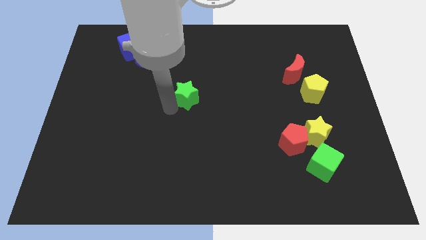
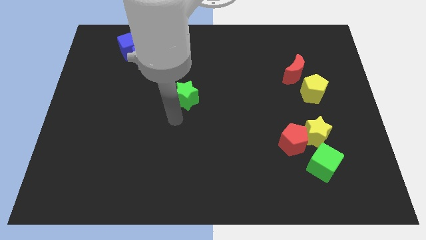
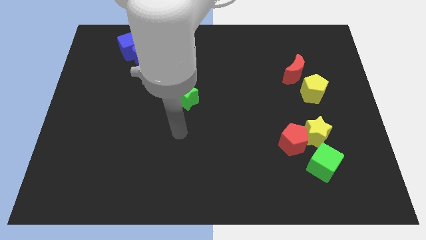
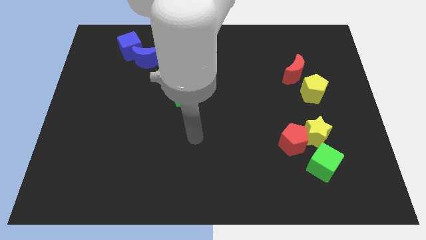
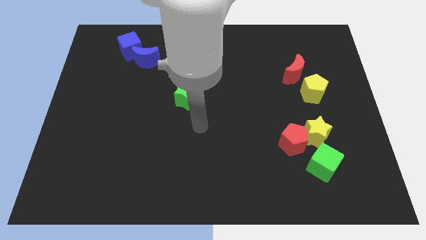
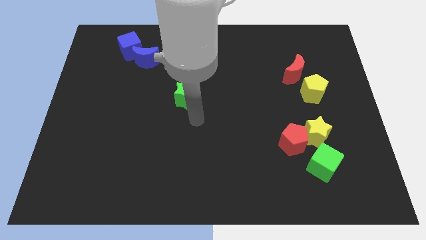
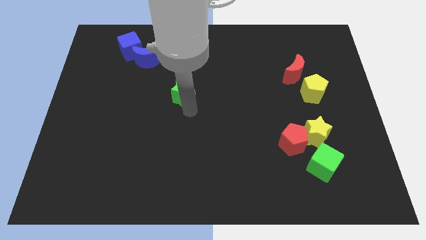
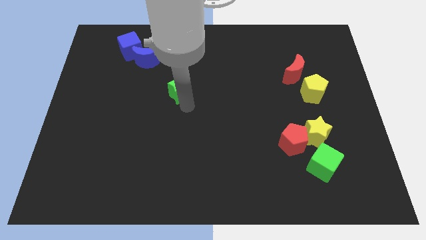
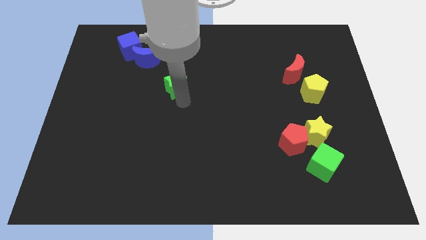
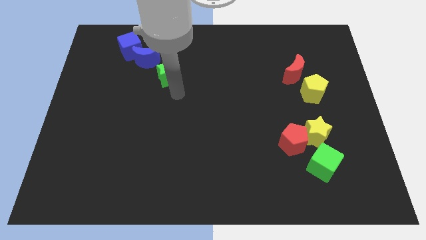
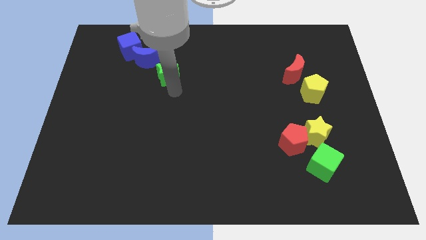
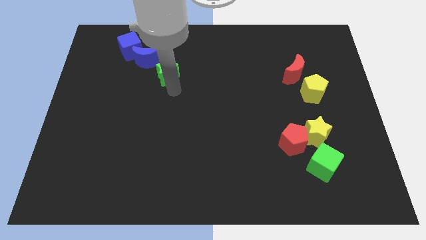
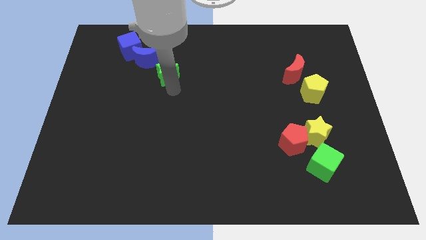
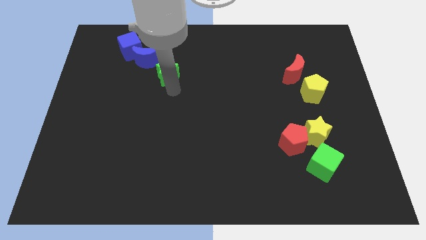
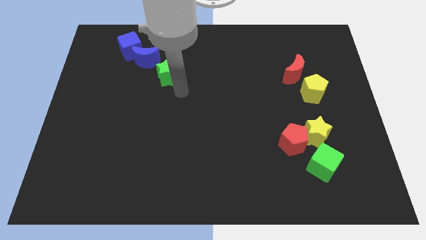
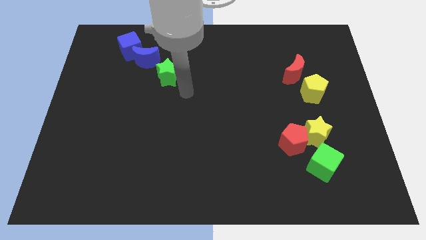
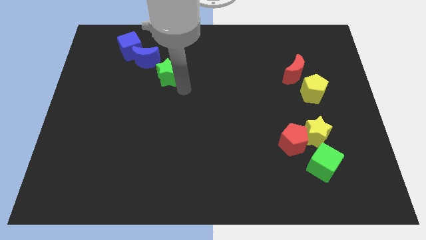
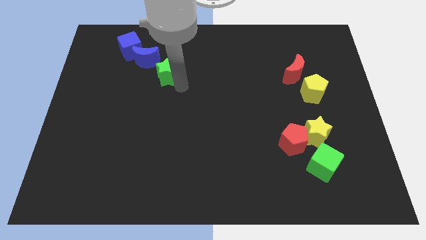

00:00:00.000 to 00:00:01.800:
move green star close to the blue moon

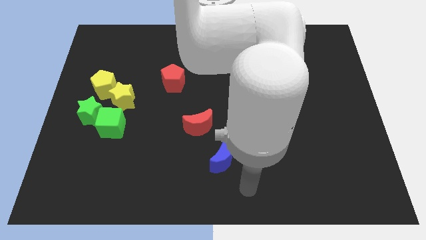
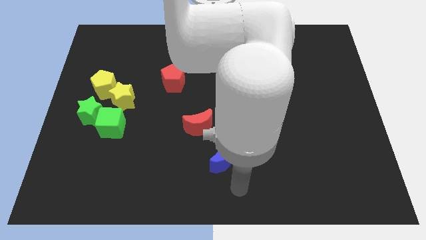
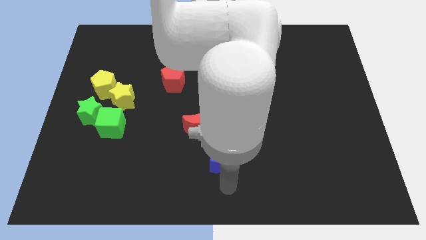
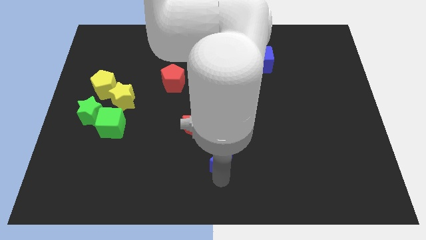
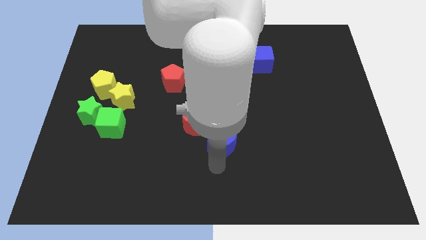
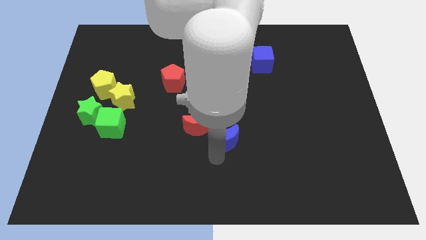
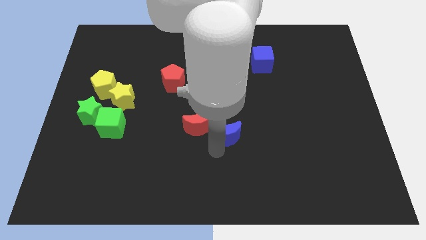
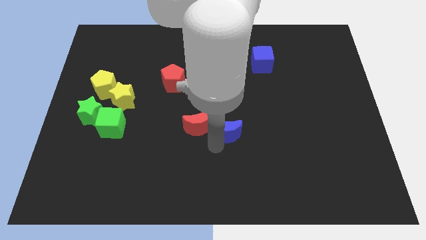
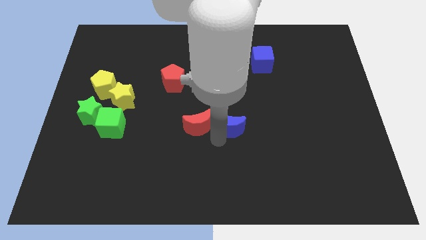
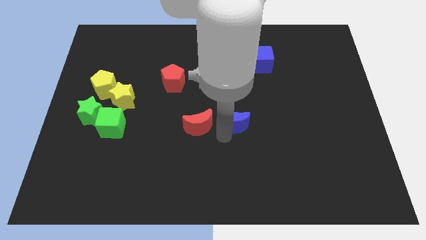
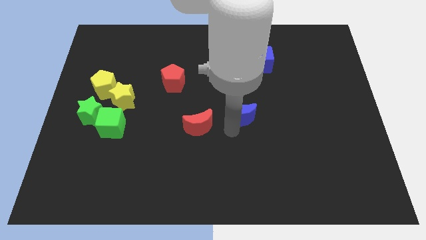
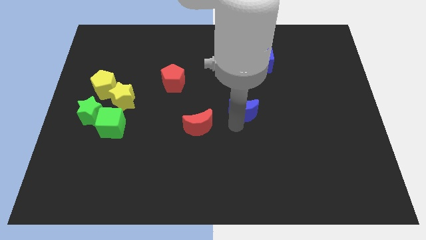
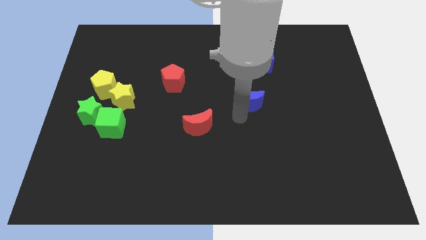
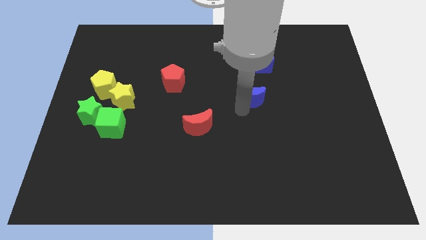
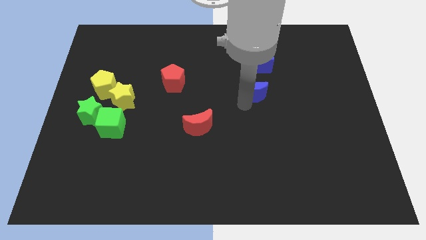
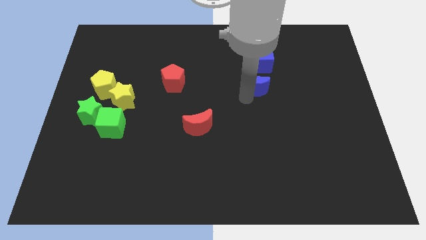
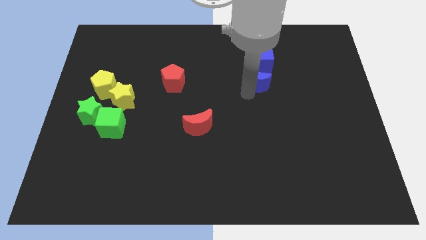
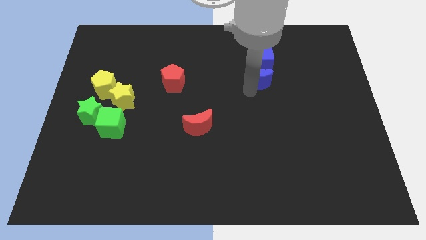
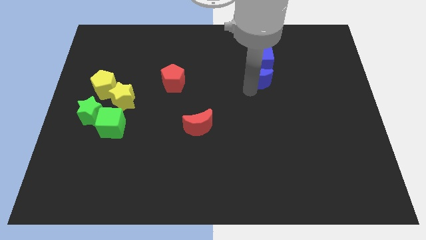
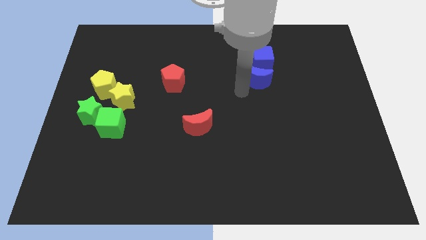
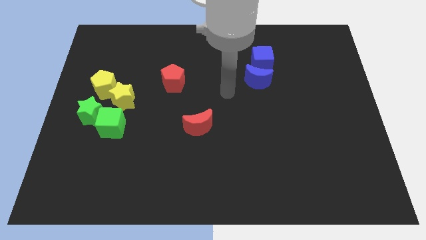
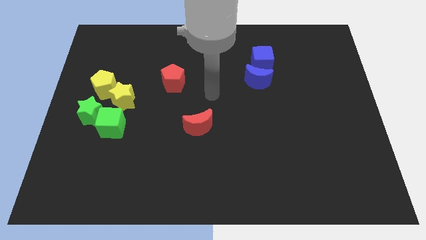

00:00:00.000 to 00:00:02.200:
push the blue moon to the bottom side of the blue cube

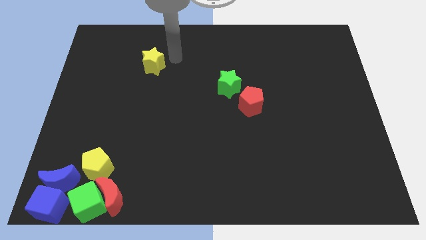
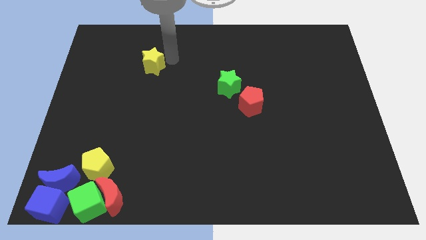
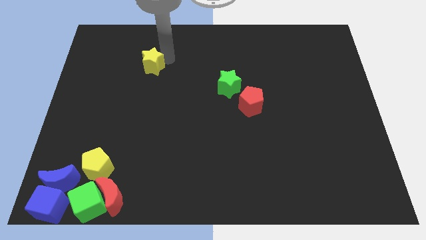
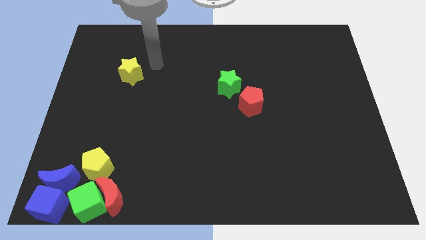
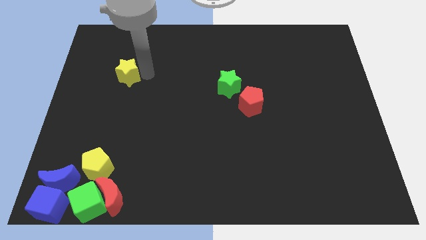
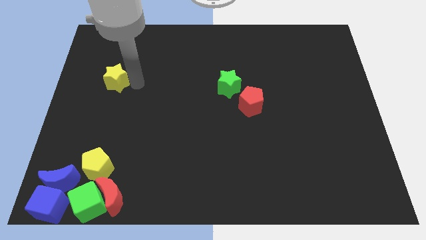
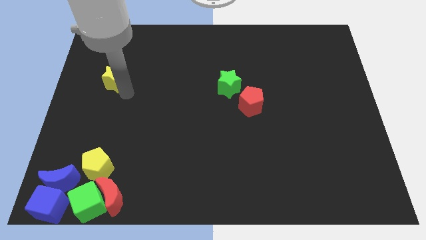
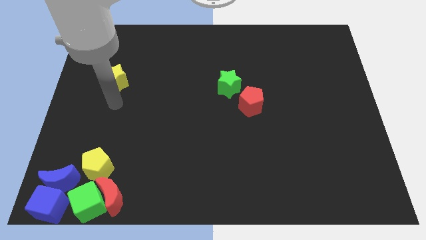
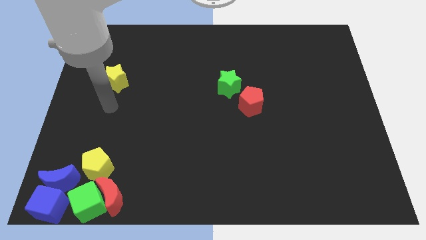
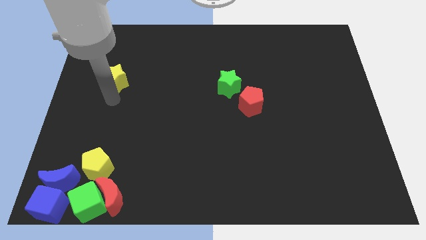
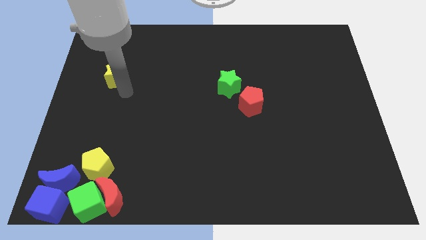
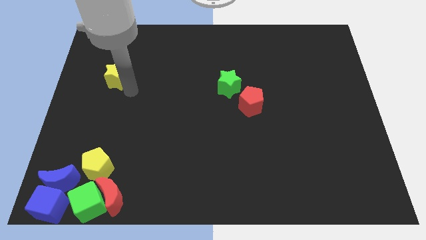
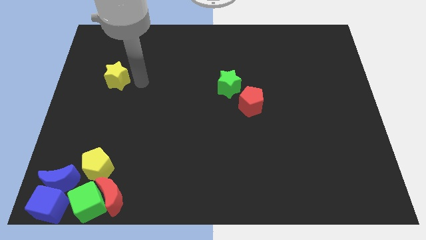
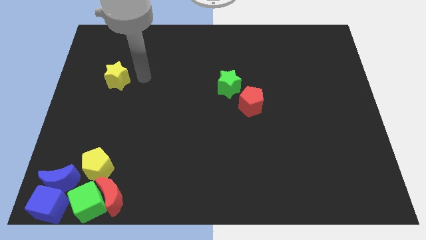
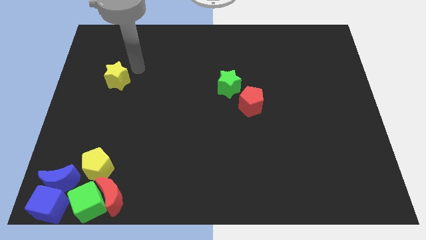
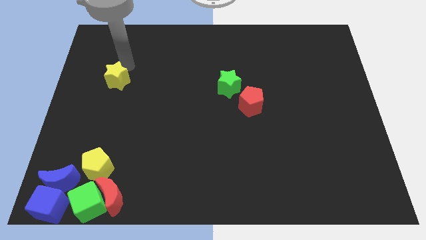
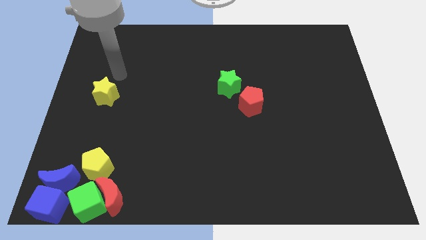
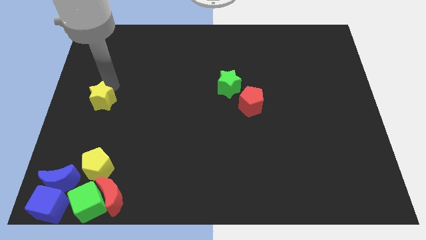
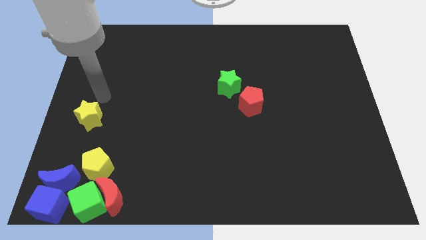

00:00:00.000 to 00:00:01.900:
put the yellow star diagonally bottom left to the green star

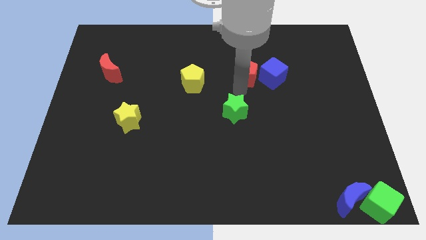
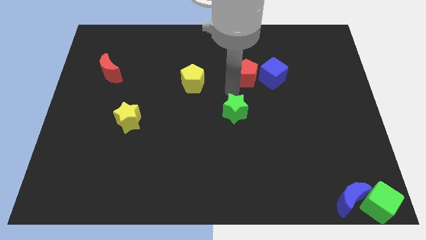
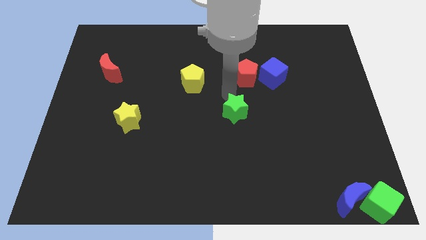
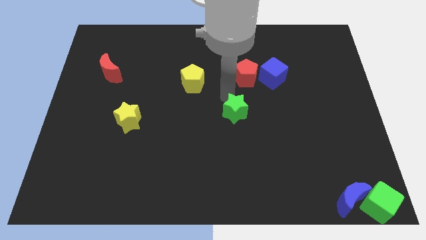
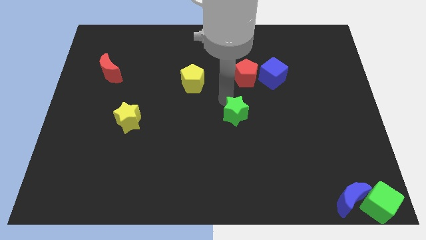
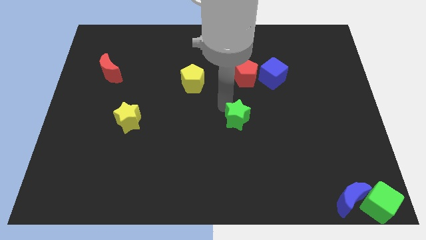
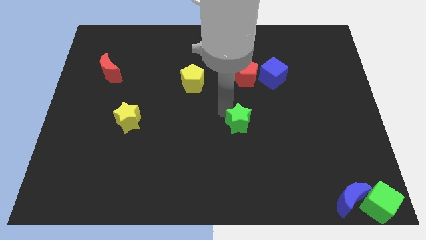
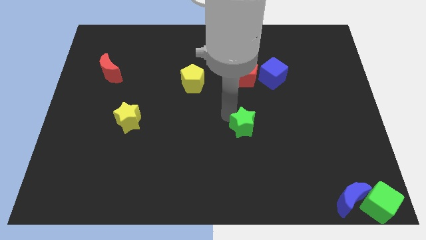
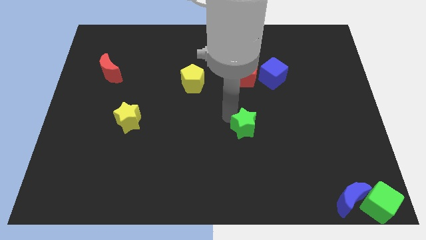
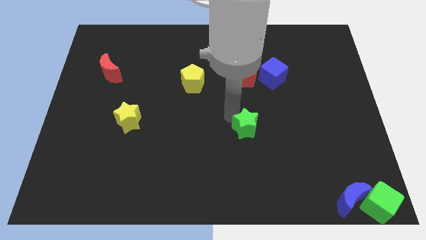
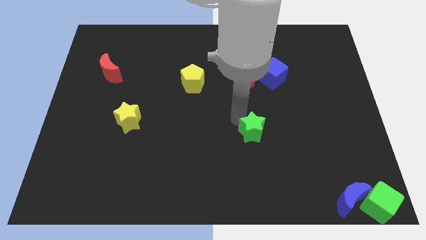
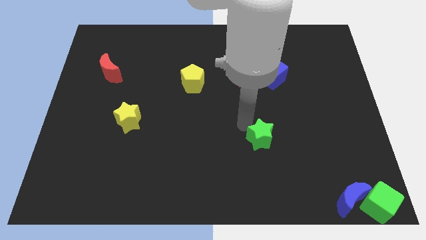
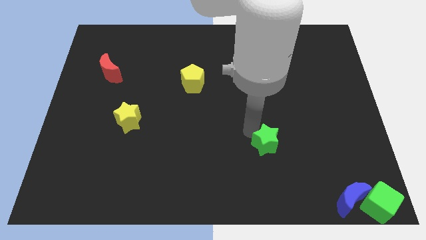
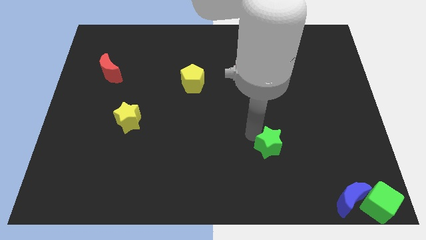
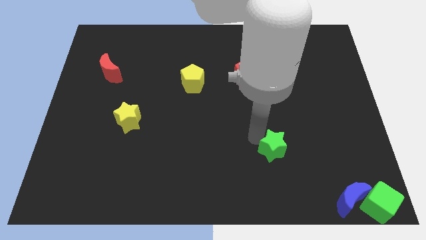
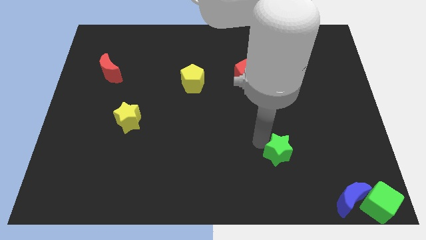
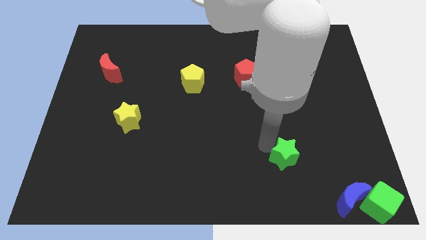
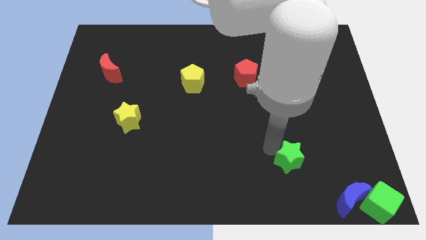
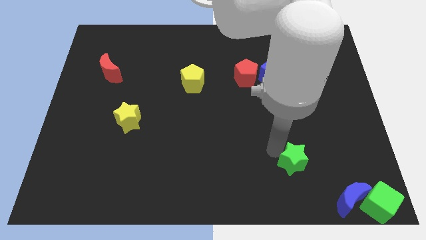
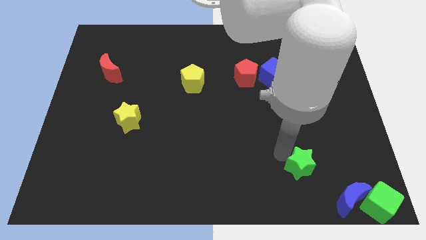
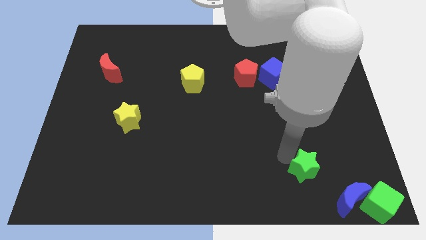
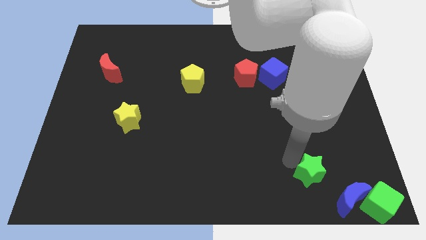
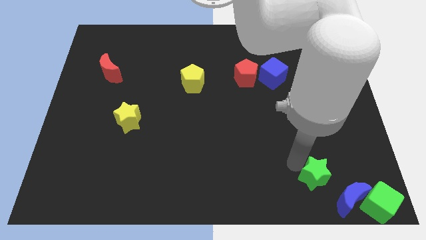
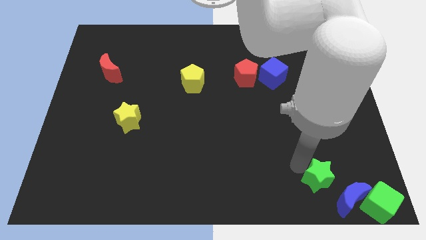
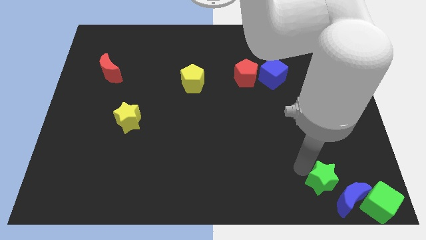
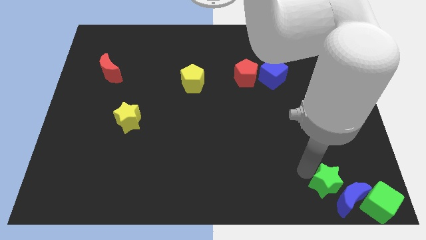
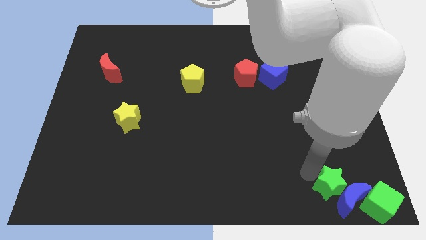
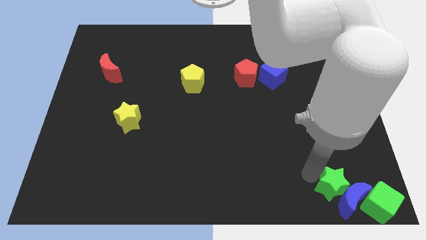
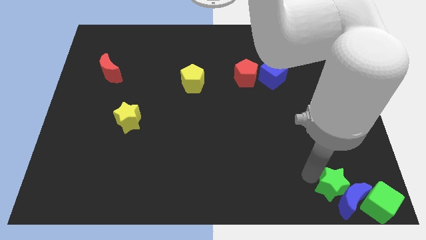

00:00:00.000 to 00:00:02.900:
place the green star at the top left side of blue crescent
